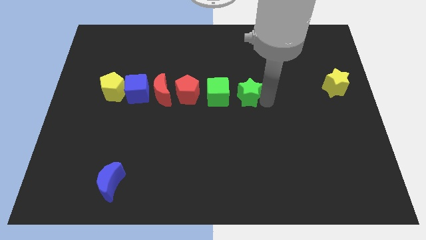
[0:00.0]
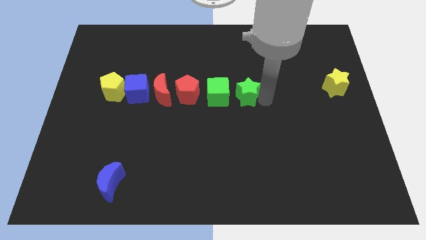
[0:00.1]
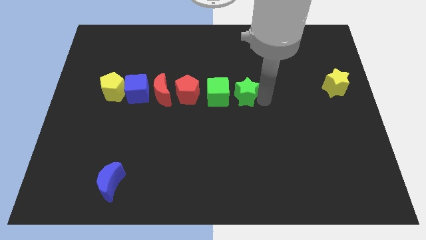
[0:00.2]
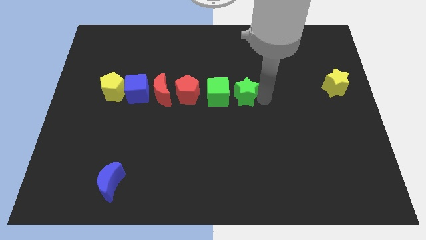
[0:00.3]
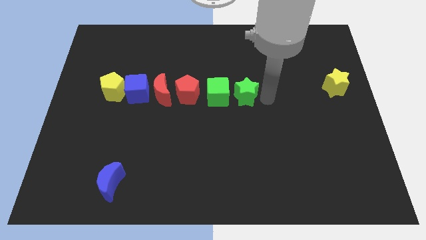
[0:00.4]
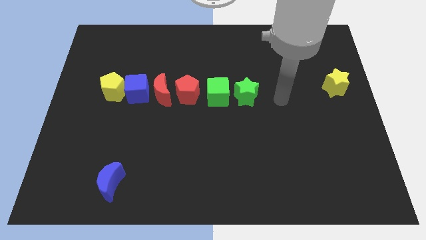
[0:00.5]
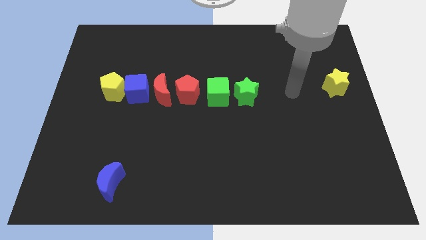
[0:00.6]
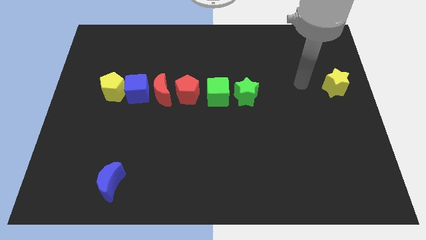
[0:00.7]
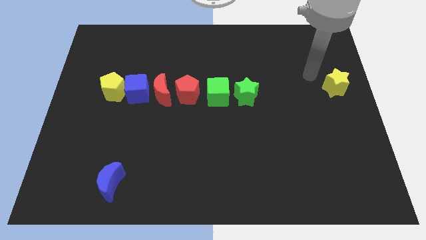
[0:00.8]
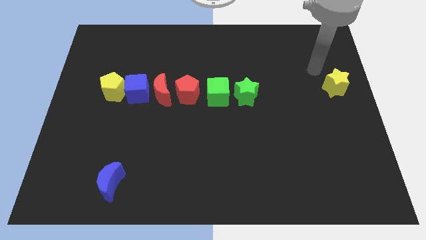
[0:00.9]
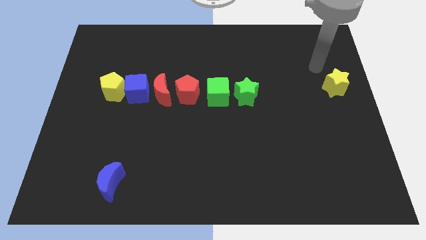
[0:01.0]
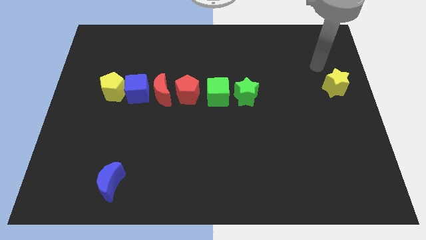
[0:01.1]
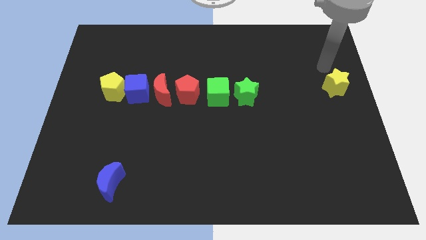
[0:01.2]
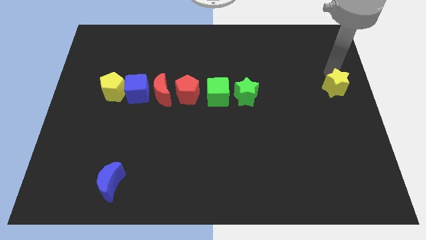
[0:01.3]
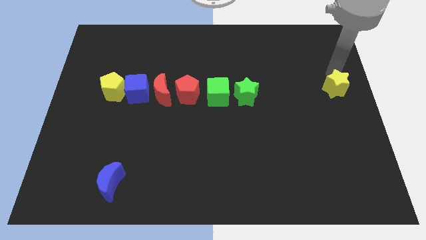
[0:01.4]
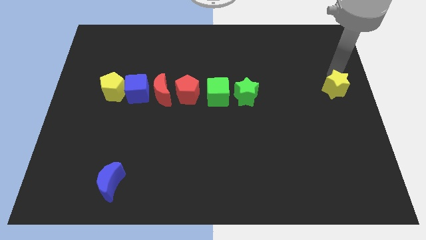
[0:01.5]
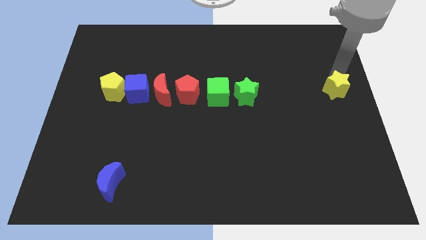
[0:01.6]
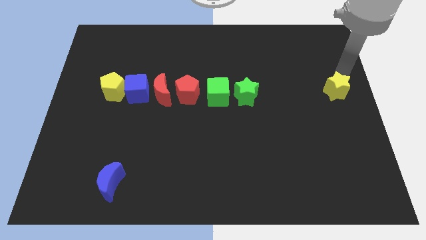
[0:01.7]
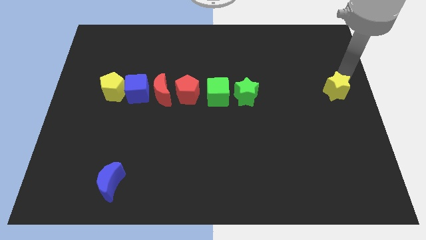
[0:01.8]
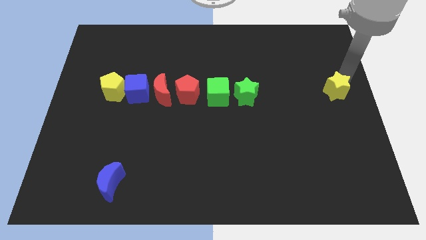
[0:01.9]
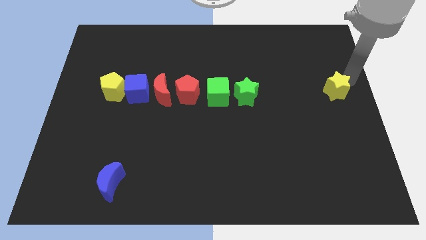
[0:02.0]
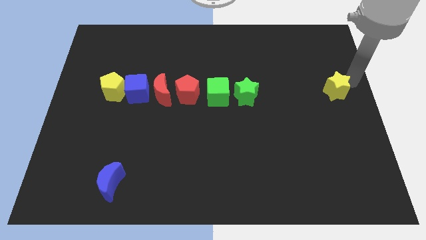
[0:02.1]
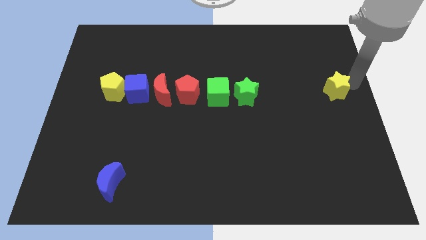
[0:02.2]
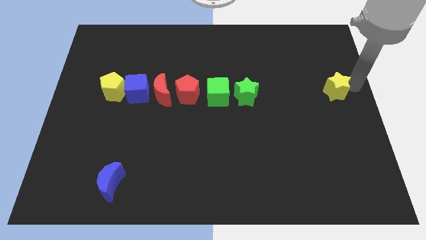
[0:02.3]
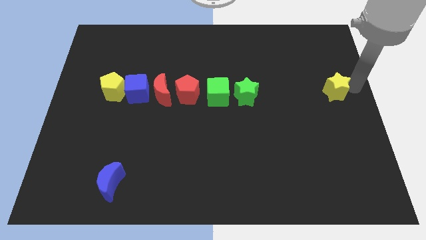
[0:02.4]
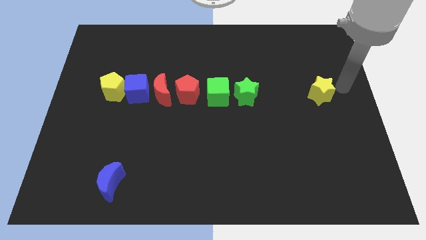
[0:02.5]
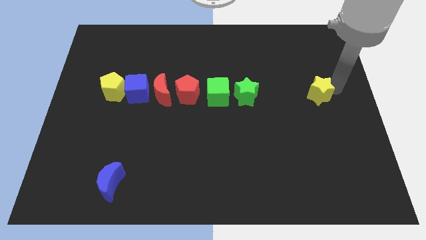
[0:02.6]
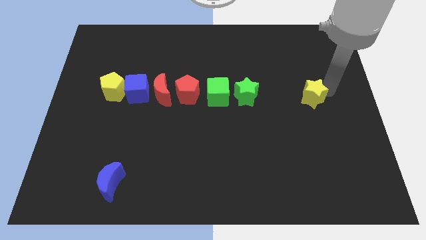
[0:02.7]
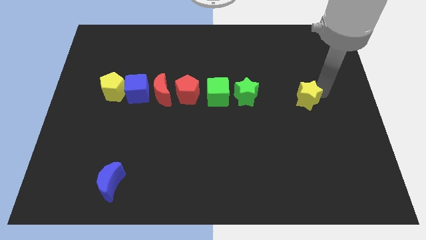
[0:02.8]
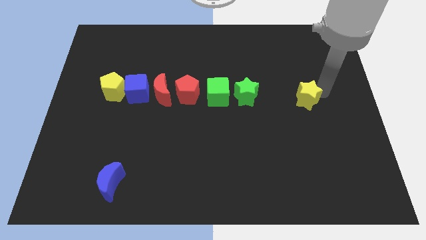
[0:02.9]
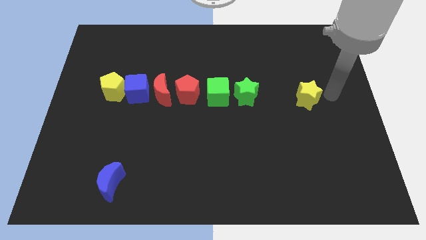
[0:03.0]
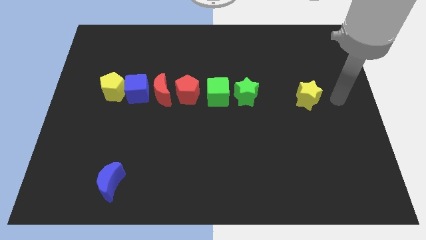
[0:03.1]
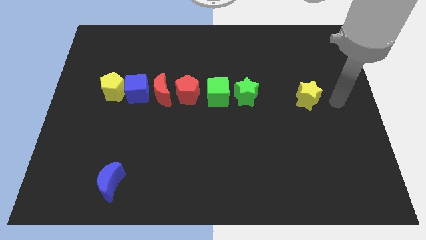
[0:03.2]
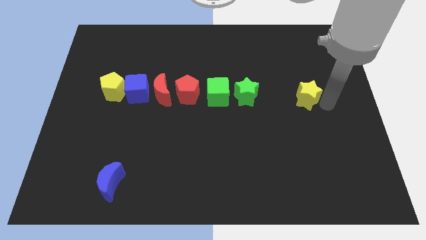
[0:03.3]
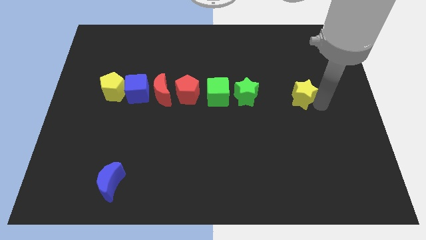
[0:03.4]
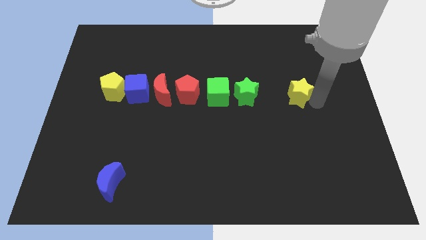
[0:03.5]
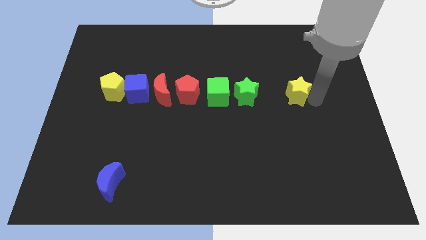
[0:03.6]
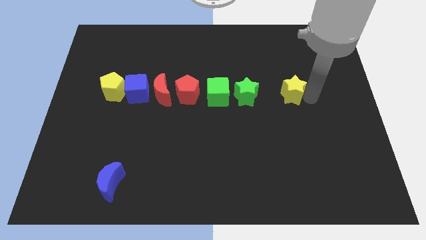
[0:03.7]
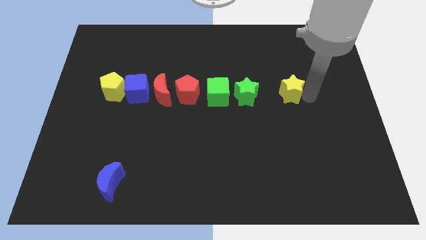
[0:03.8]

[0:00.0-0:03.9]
move yellow star towards green star

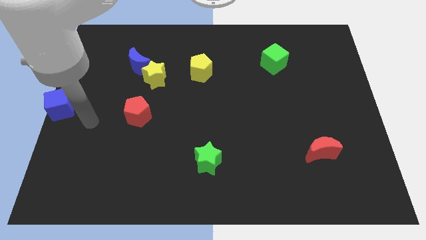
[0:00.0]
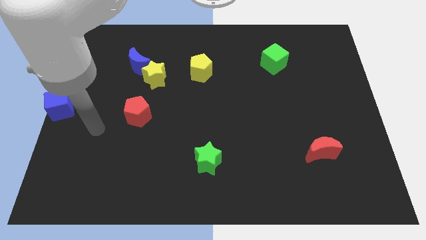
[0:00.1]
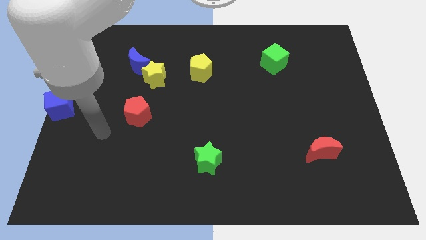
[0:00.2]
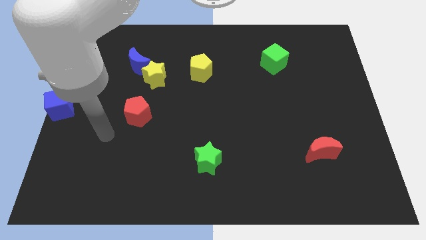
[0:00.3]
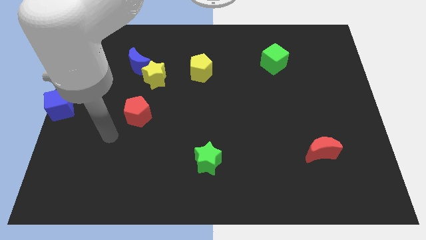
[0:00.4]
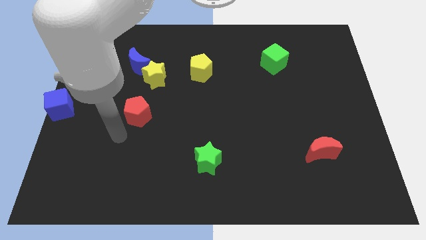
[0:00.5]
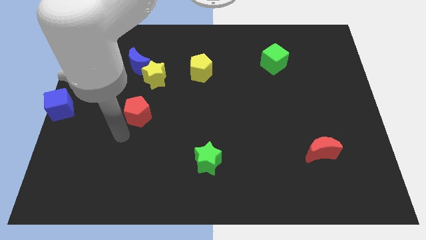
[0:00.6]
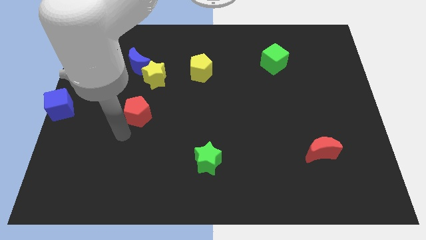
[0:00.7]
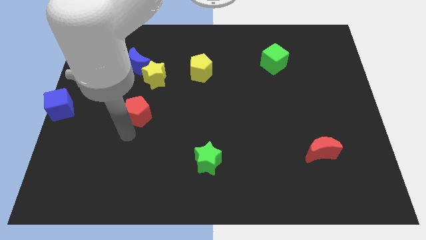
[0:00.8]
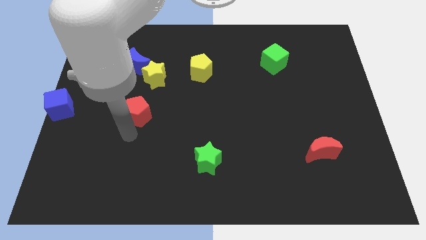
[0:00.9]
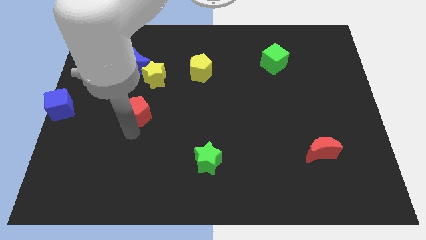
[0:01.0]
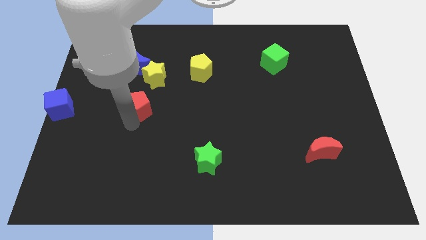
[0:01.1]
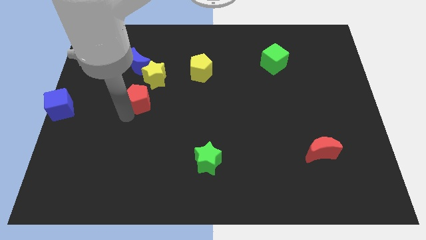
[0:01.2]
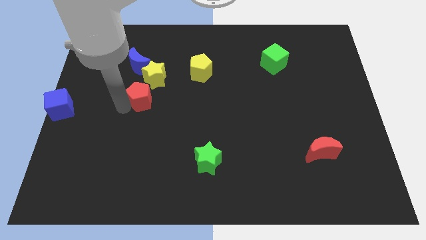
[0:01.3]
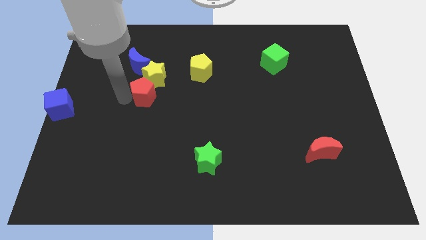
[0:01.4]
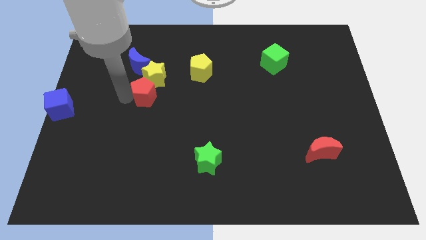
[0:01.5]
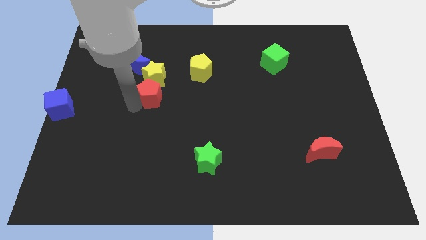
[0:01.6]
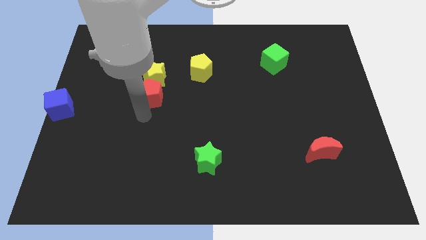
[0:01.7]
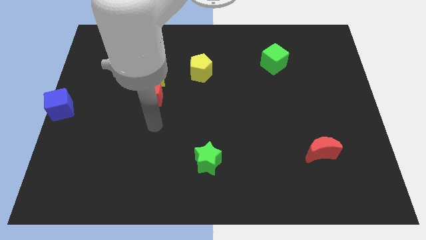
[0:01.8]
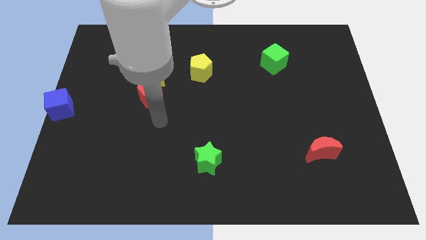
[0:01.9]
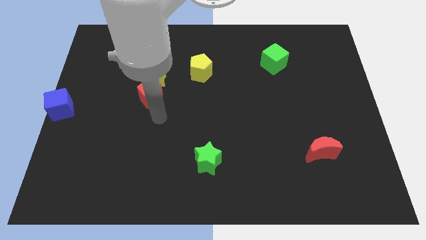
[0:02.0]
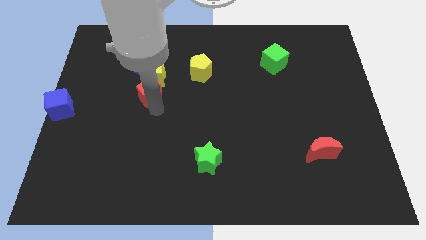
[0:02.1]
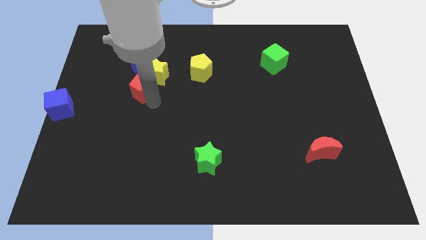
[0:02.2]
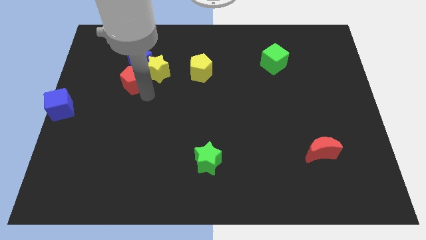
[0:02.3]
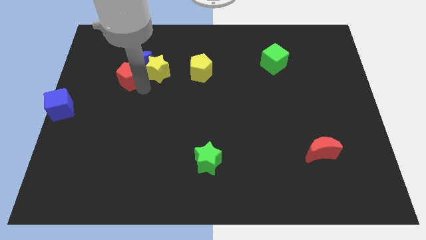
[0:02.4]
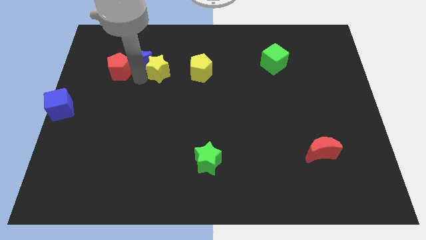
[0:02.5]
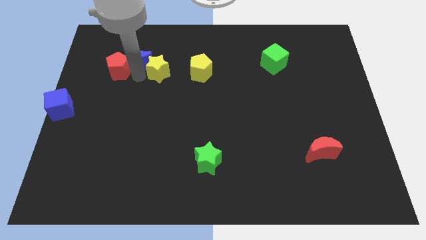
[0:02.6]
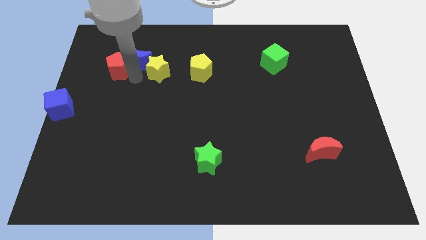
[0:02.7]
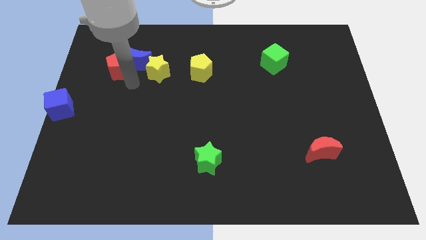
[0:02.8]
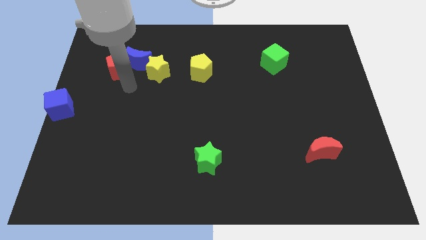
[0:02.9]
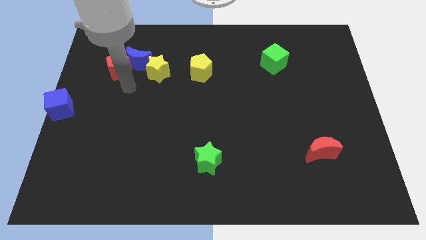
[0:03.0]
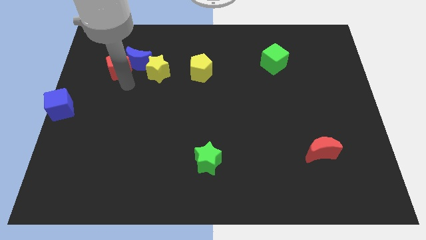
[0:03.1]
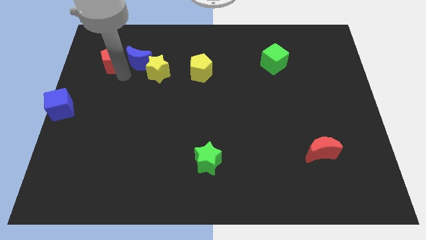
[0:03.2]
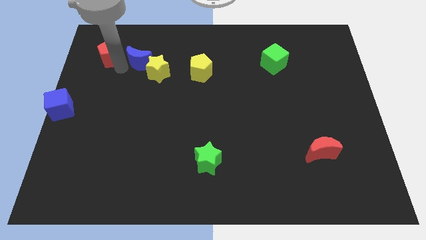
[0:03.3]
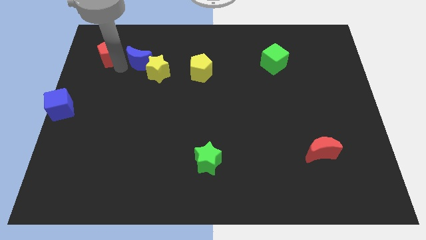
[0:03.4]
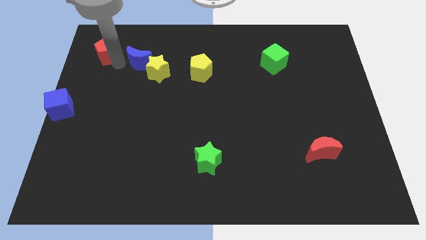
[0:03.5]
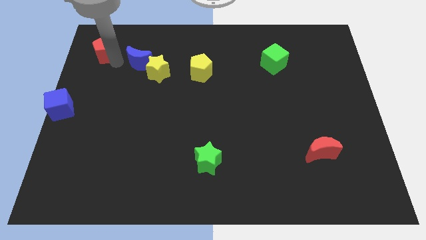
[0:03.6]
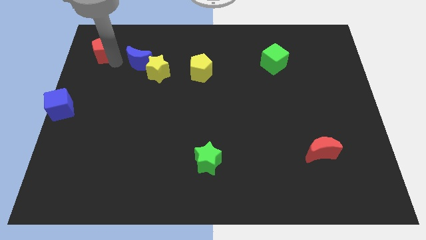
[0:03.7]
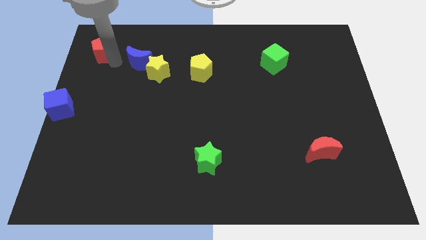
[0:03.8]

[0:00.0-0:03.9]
push the red pentagon towards the top left side of the board

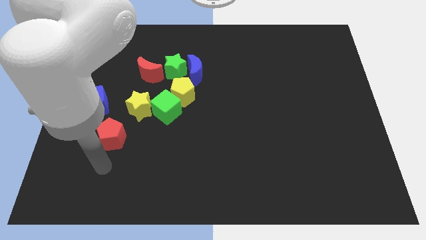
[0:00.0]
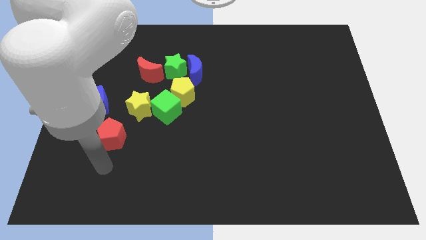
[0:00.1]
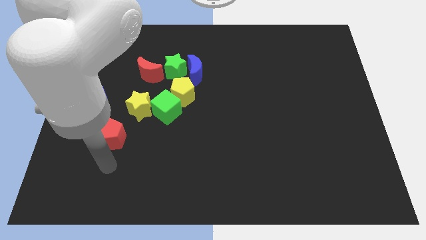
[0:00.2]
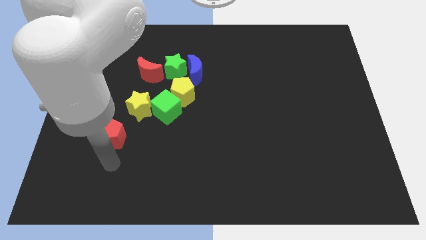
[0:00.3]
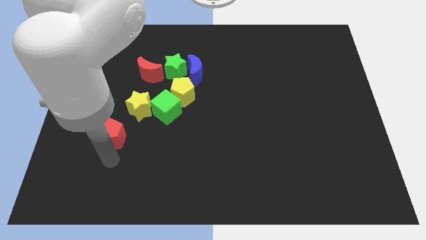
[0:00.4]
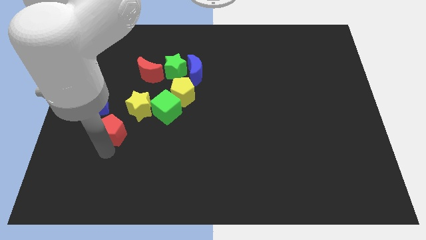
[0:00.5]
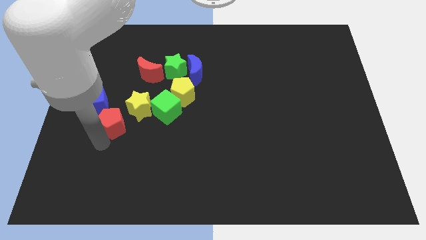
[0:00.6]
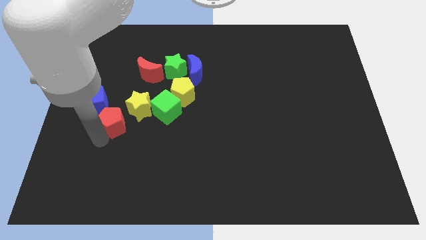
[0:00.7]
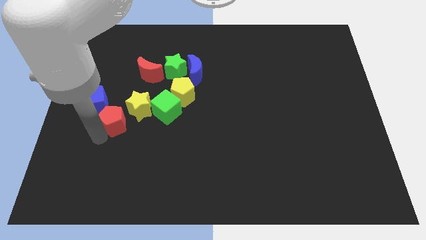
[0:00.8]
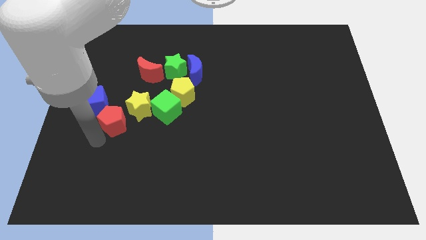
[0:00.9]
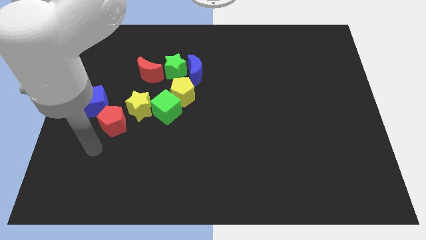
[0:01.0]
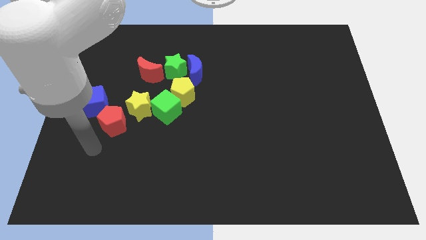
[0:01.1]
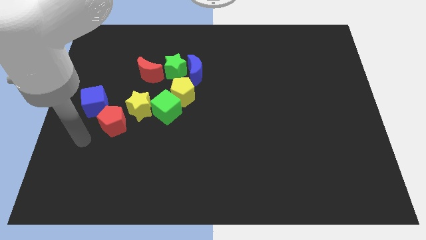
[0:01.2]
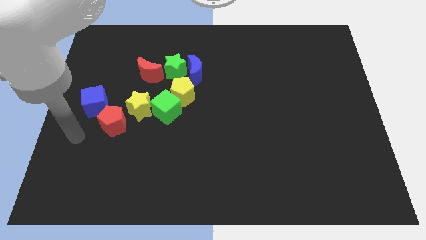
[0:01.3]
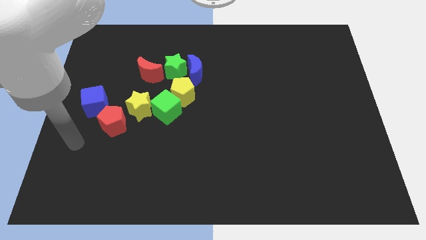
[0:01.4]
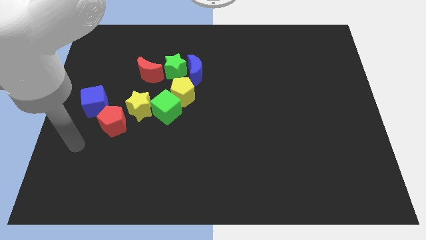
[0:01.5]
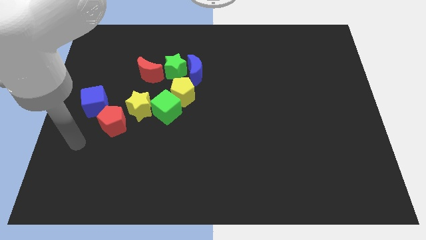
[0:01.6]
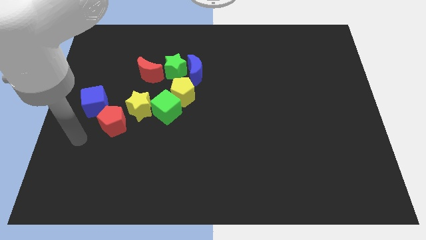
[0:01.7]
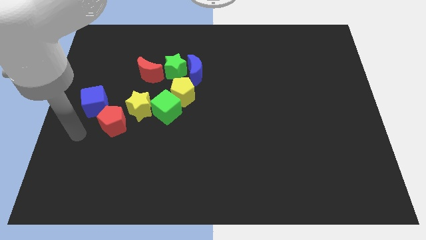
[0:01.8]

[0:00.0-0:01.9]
move red pentagon towards yellow star
